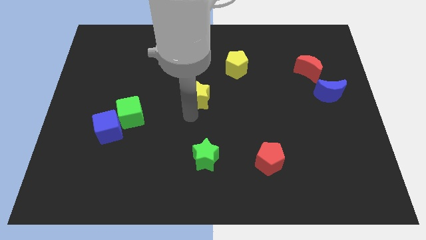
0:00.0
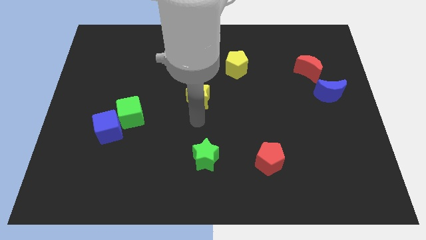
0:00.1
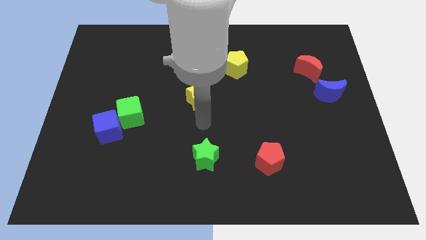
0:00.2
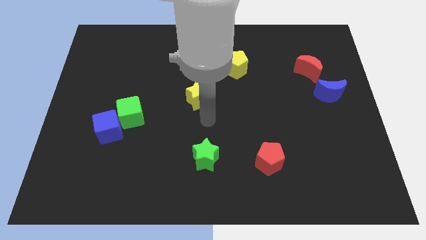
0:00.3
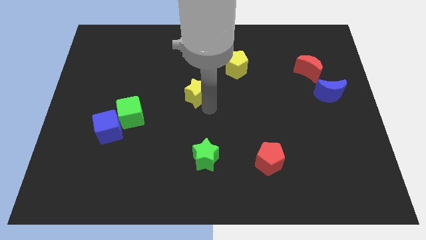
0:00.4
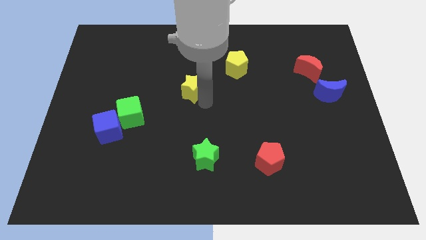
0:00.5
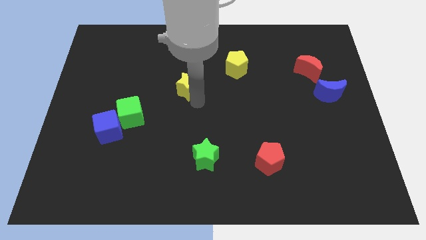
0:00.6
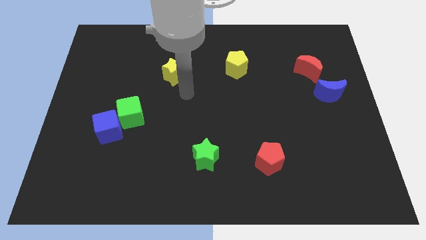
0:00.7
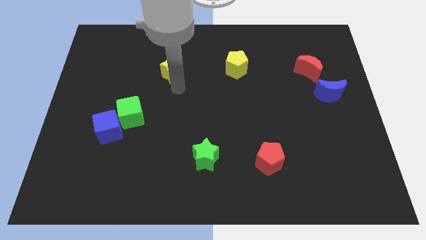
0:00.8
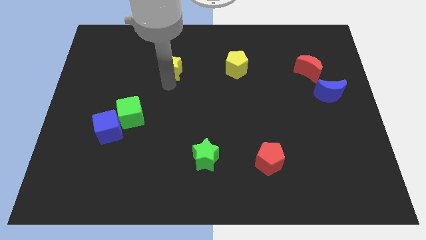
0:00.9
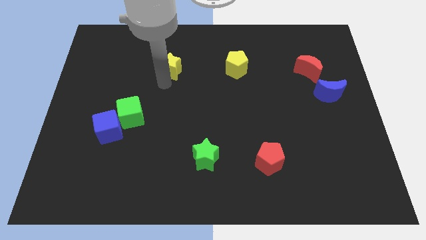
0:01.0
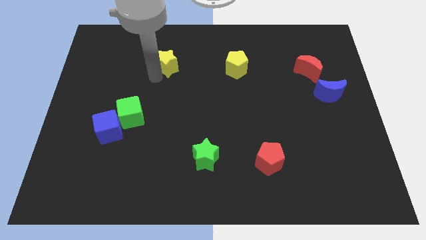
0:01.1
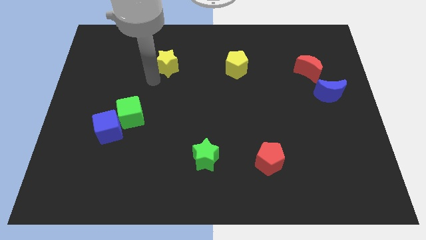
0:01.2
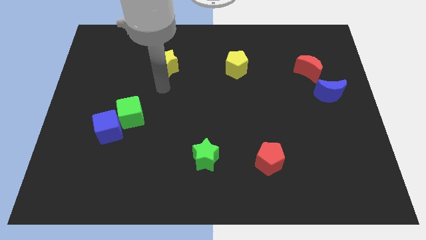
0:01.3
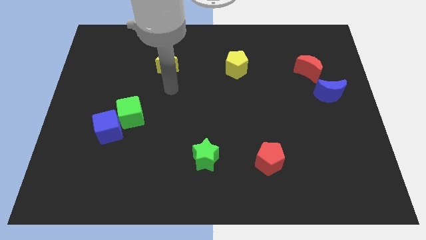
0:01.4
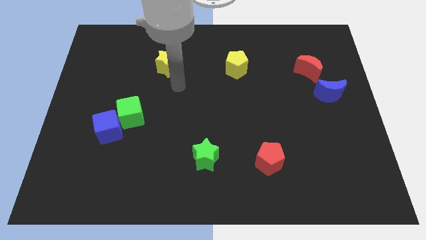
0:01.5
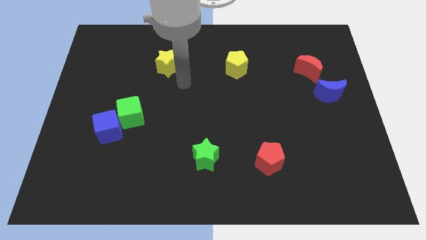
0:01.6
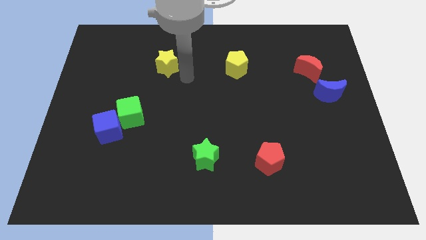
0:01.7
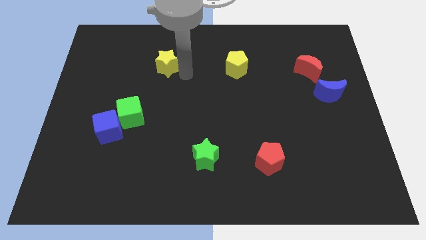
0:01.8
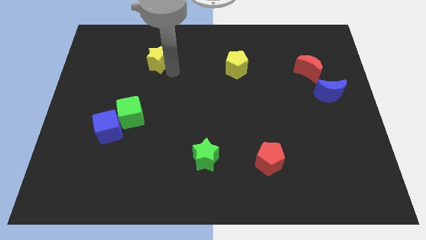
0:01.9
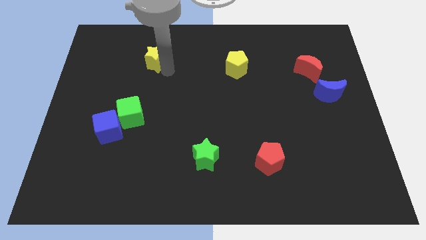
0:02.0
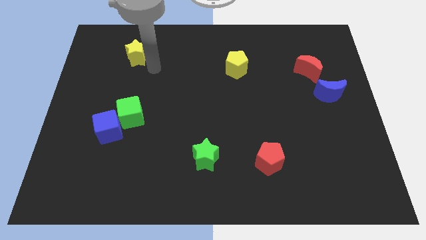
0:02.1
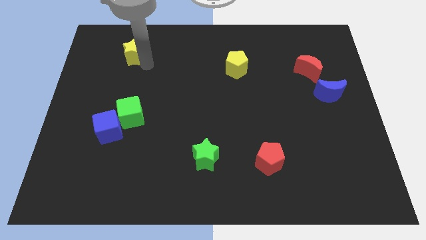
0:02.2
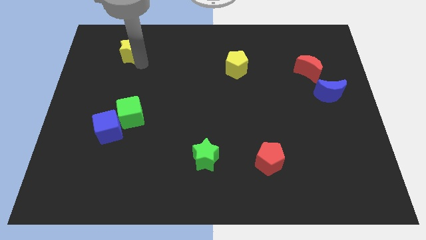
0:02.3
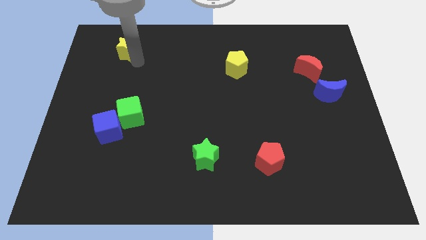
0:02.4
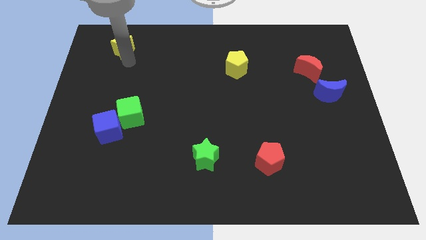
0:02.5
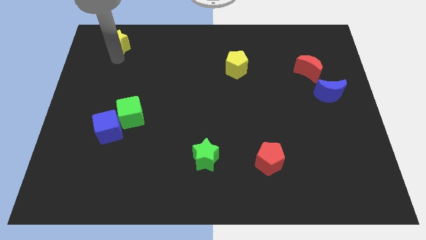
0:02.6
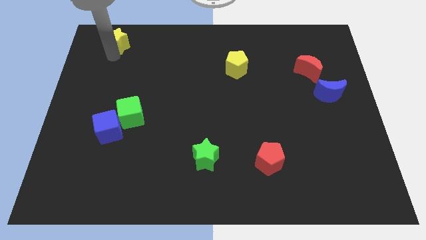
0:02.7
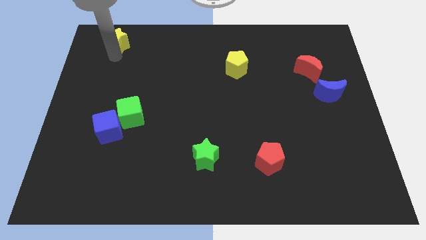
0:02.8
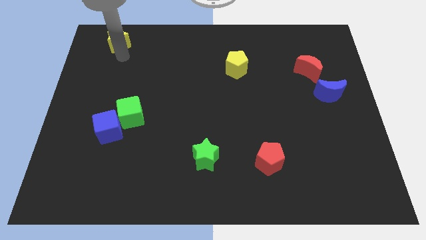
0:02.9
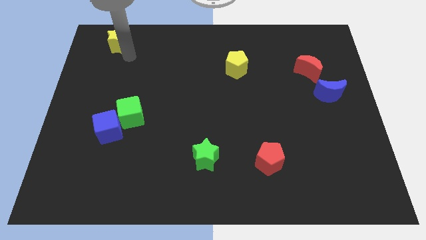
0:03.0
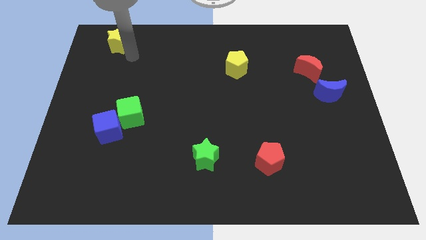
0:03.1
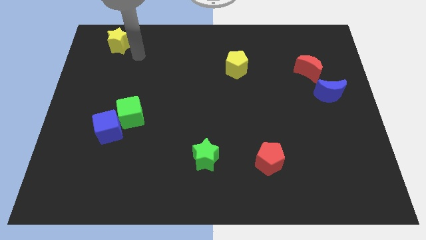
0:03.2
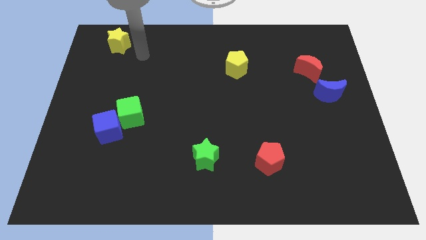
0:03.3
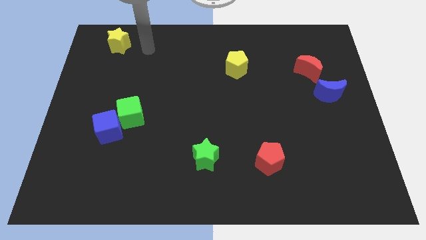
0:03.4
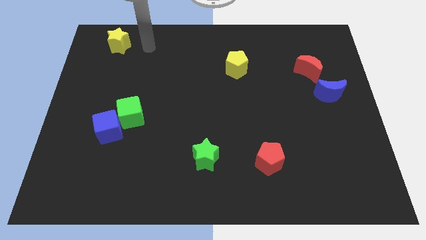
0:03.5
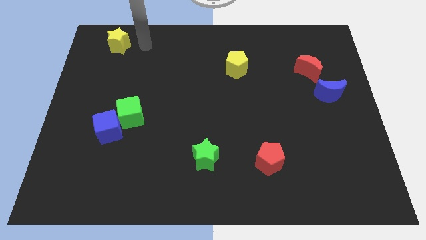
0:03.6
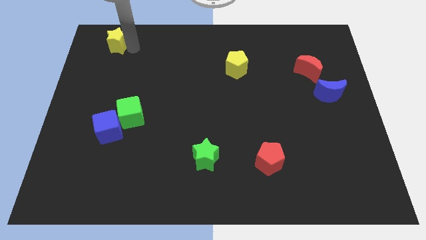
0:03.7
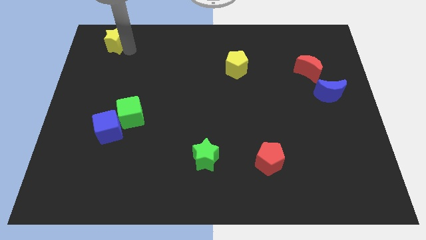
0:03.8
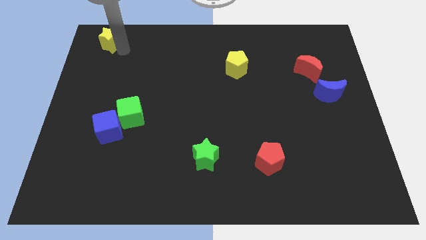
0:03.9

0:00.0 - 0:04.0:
push the yellow star to the top left of the board

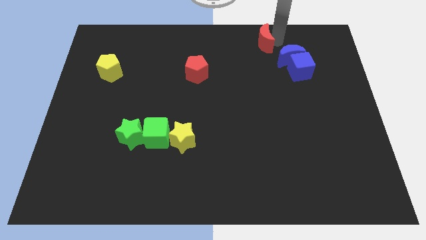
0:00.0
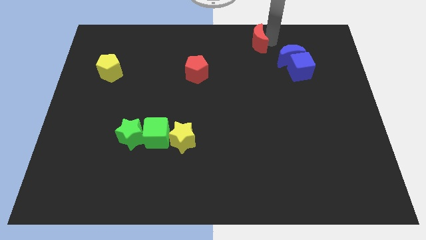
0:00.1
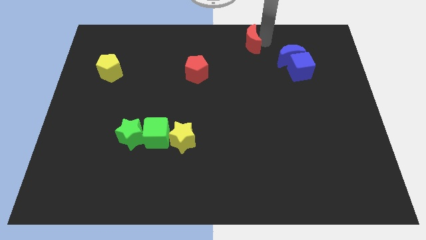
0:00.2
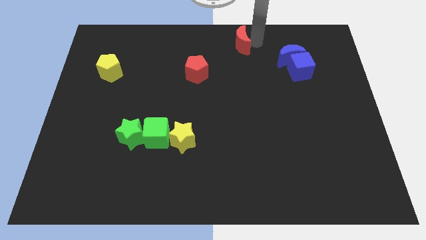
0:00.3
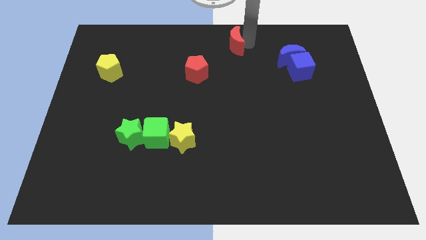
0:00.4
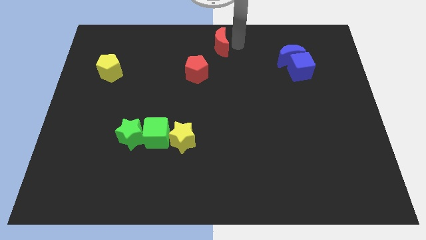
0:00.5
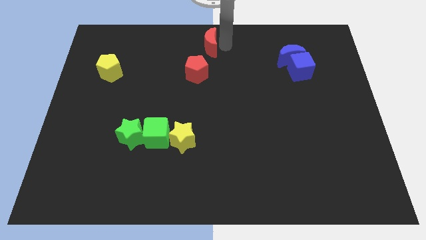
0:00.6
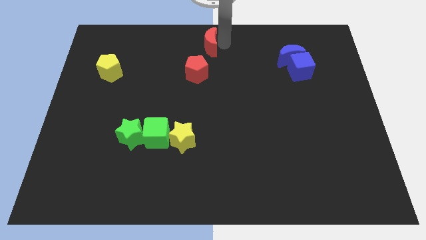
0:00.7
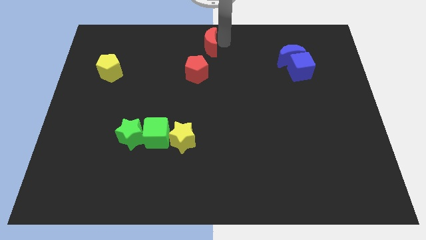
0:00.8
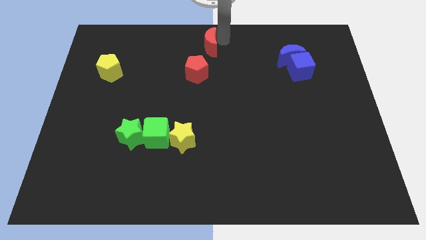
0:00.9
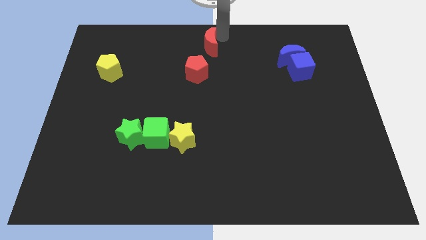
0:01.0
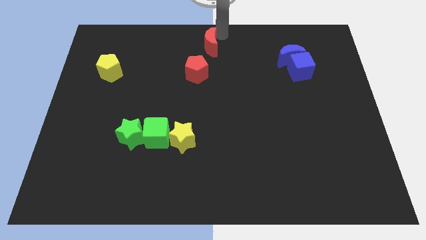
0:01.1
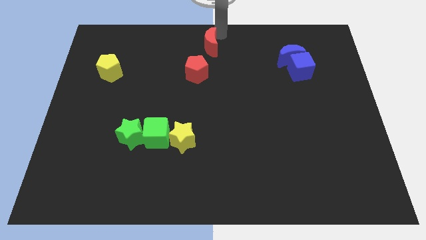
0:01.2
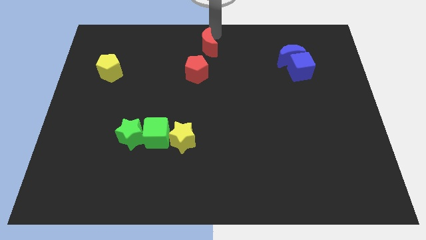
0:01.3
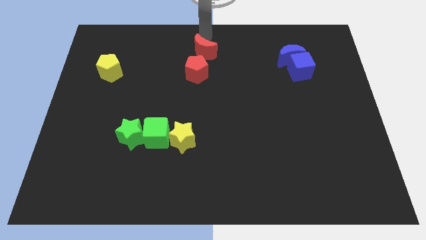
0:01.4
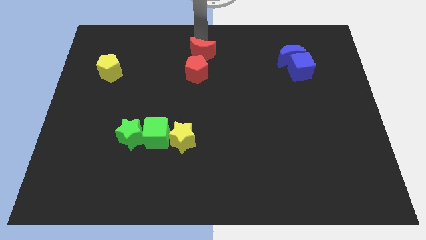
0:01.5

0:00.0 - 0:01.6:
place the red moon above the red pentagon

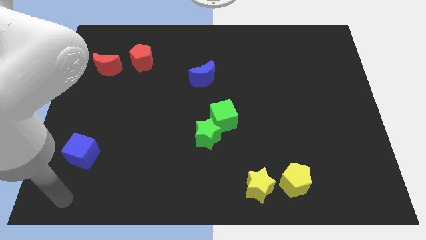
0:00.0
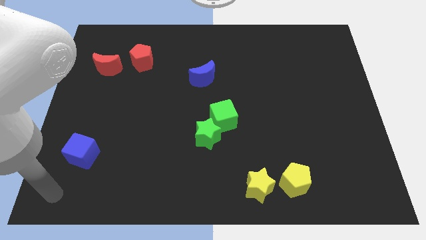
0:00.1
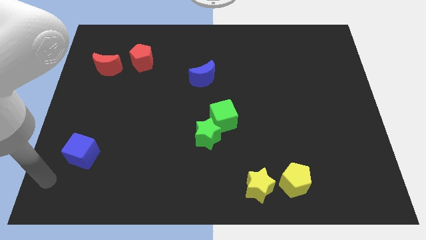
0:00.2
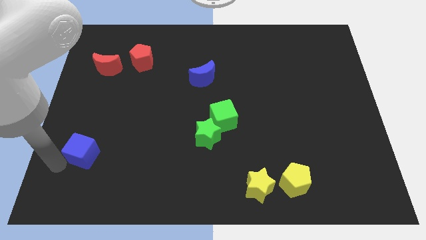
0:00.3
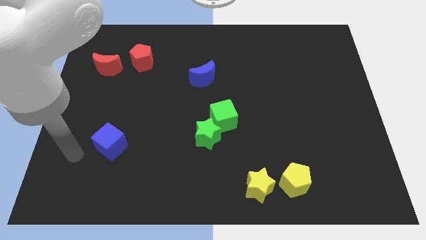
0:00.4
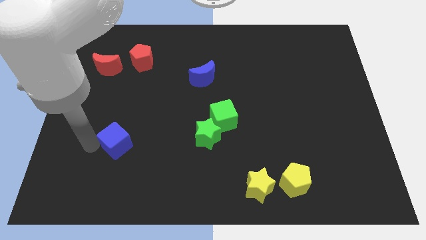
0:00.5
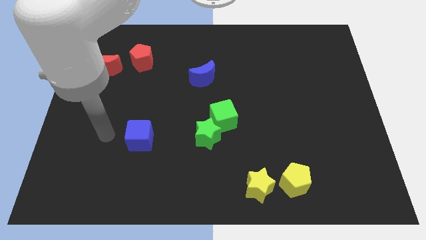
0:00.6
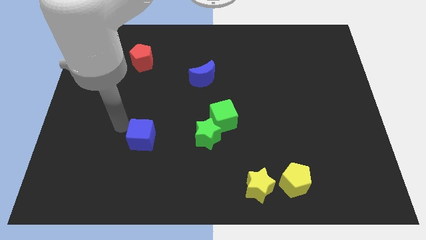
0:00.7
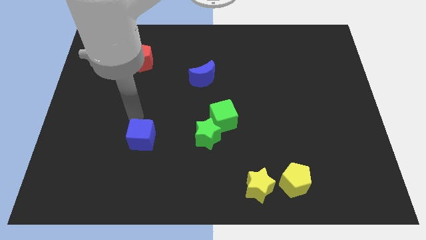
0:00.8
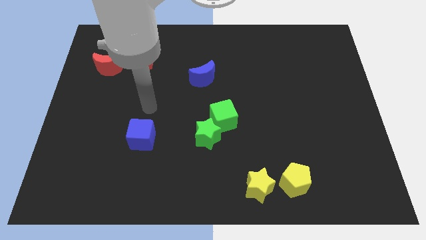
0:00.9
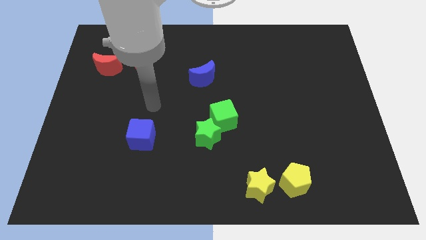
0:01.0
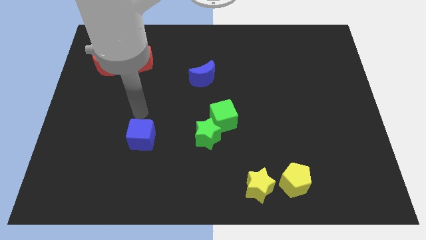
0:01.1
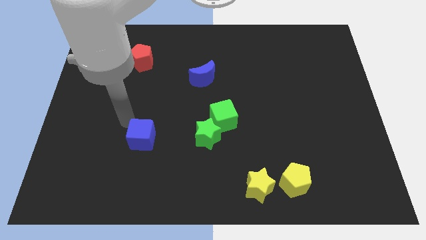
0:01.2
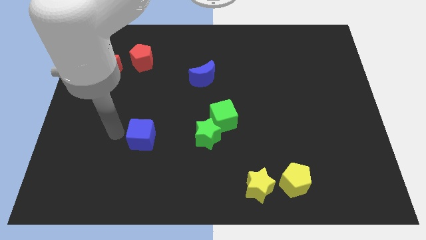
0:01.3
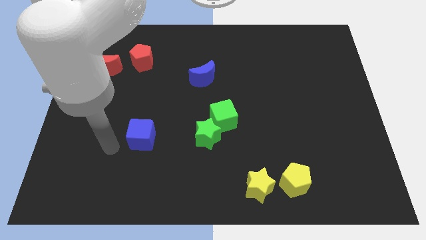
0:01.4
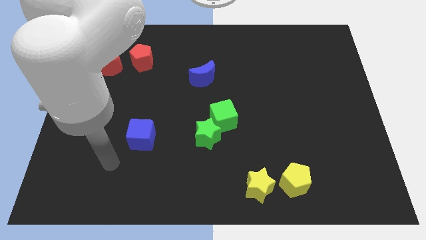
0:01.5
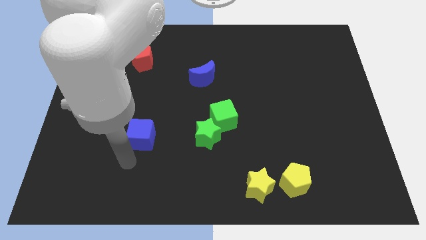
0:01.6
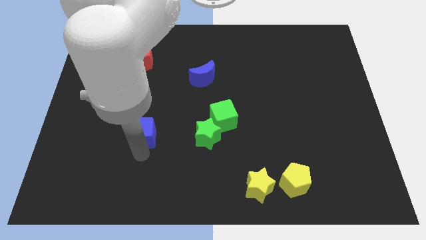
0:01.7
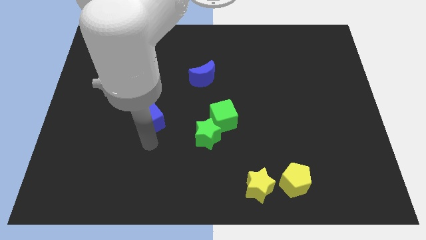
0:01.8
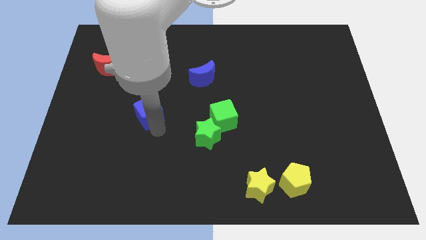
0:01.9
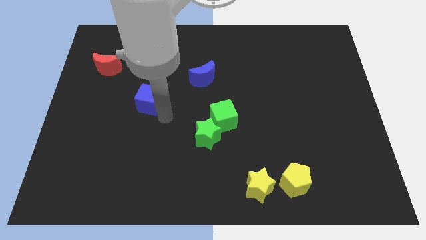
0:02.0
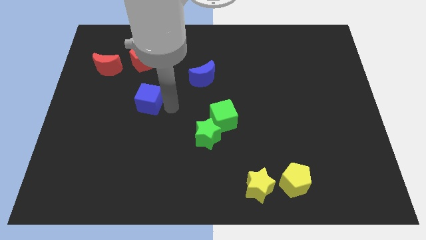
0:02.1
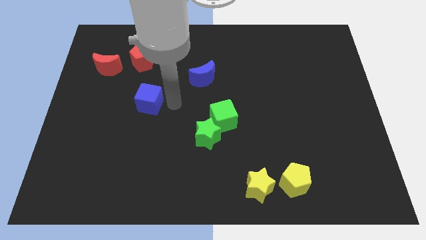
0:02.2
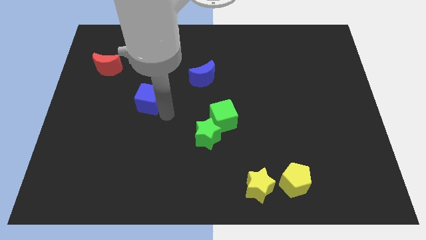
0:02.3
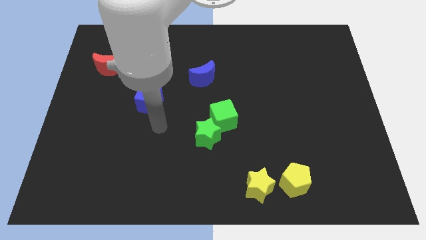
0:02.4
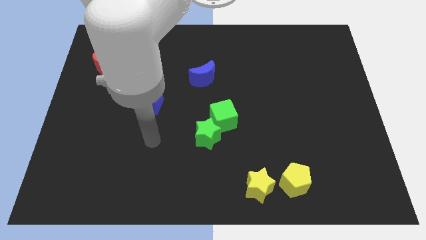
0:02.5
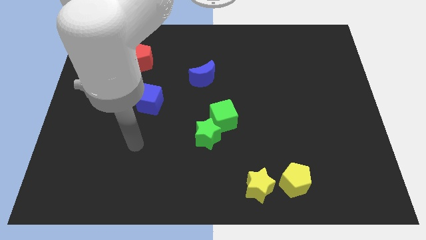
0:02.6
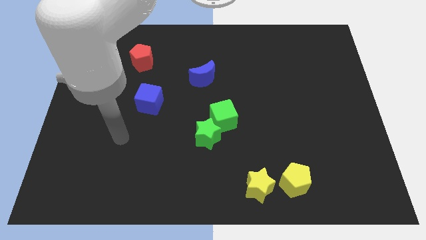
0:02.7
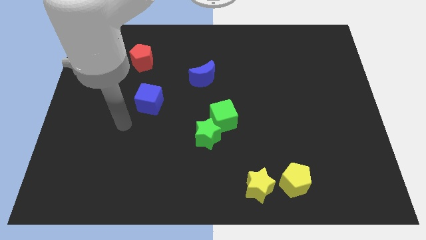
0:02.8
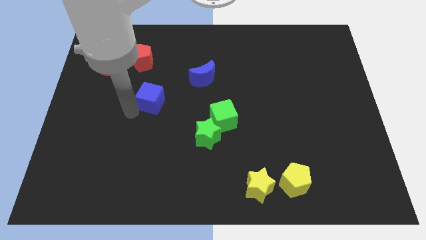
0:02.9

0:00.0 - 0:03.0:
move the blue cube vertical to the top left of the green star

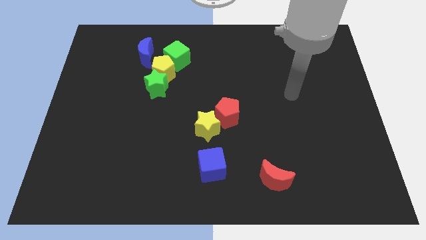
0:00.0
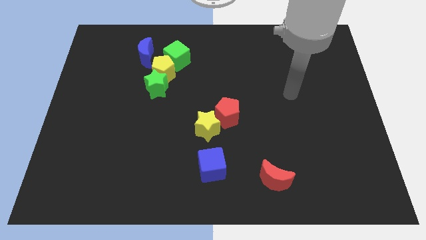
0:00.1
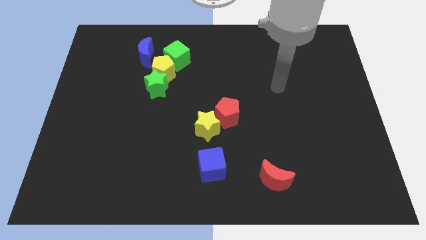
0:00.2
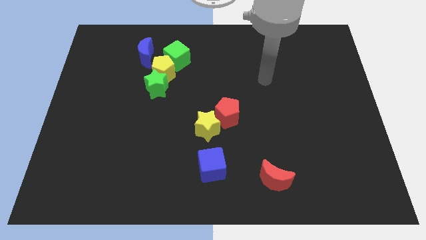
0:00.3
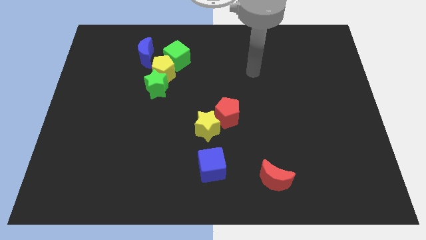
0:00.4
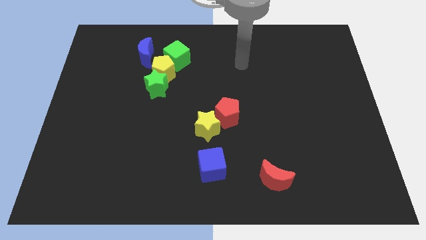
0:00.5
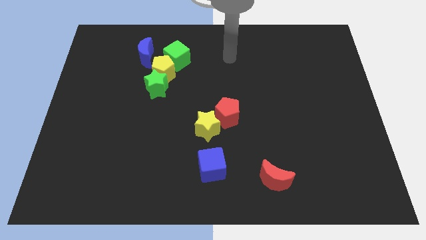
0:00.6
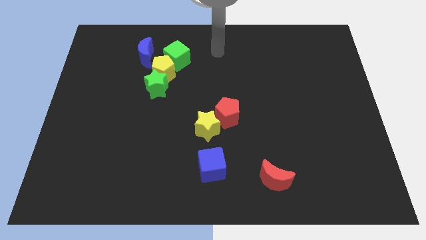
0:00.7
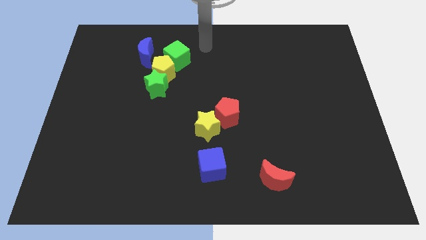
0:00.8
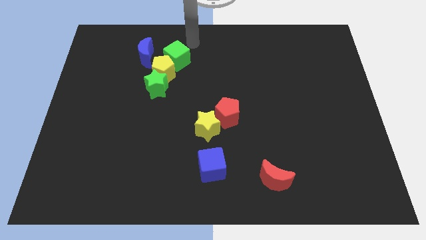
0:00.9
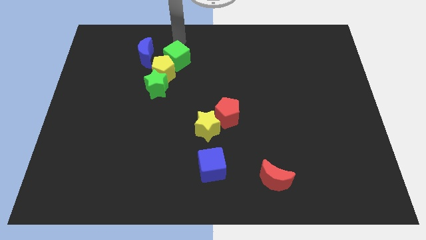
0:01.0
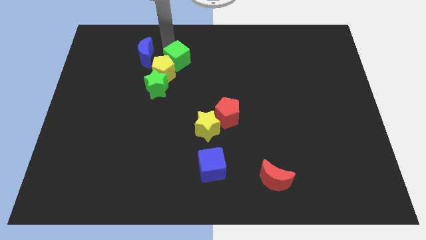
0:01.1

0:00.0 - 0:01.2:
point your arm above the green cube
